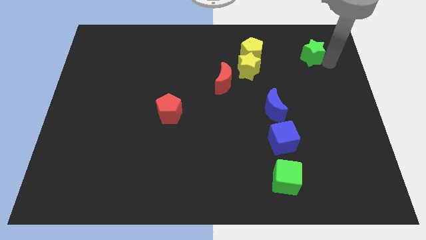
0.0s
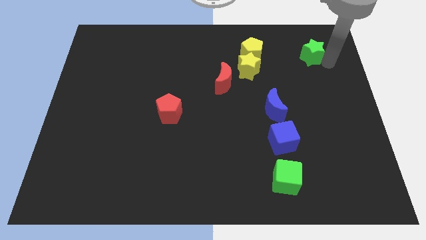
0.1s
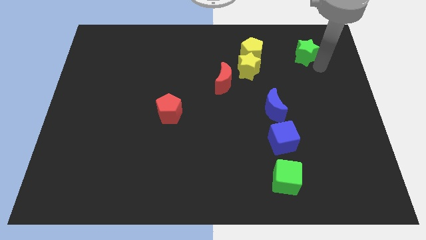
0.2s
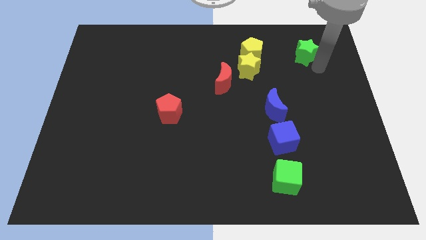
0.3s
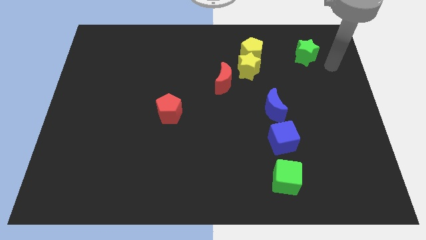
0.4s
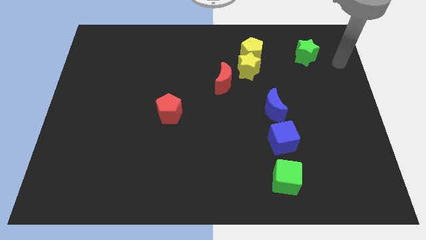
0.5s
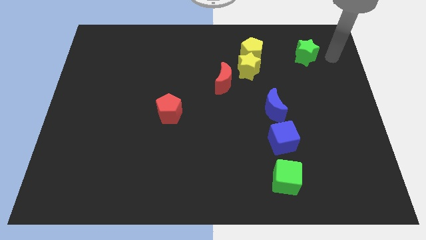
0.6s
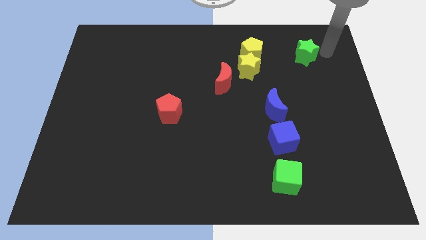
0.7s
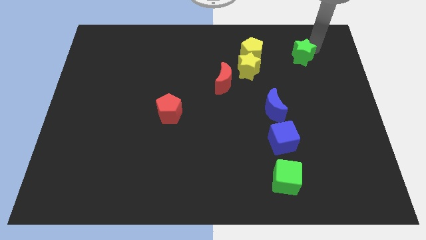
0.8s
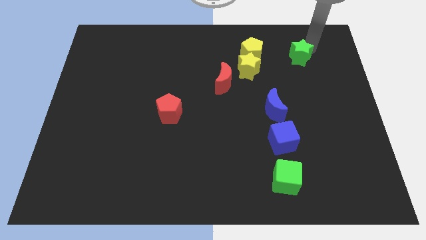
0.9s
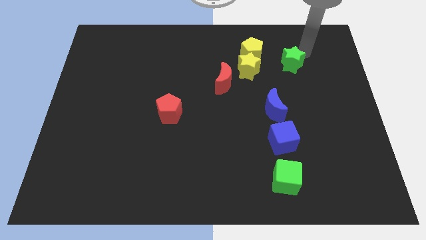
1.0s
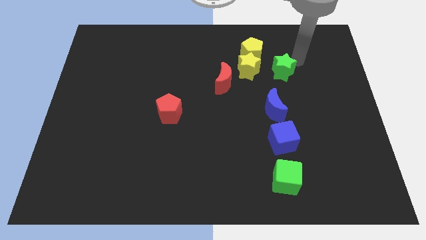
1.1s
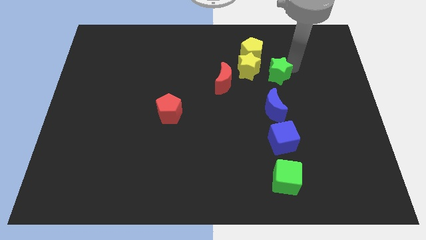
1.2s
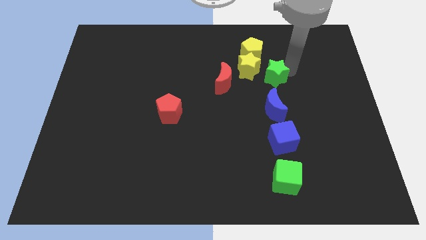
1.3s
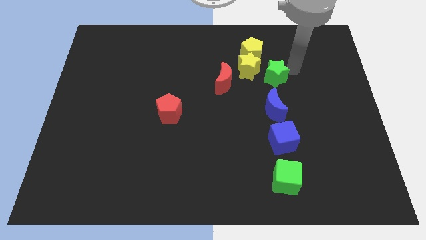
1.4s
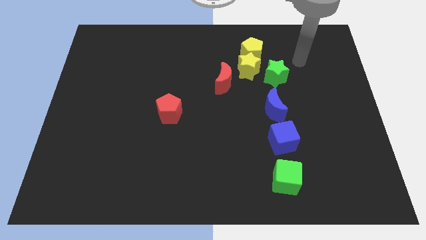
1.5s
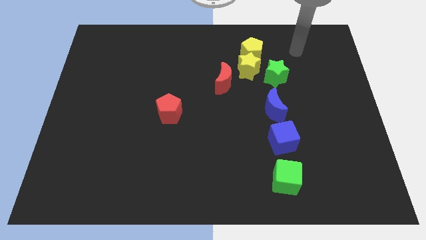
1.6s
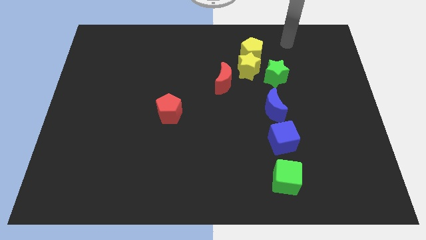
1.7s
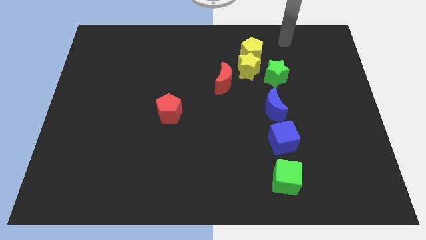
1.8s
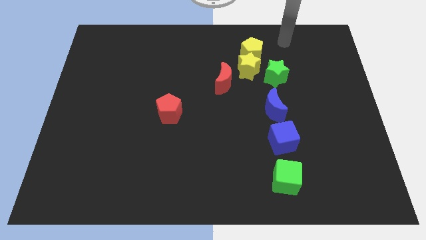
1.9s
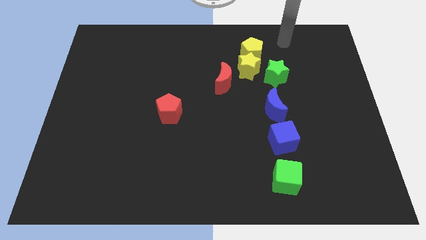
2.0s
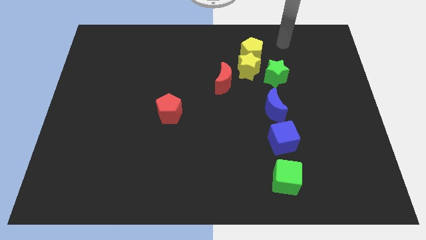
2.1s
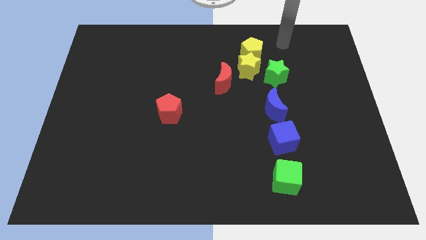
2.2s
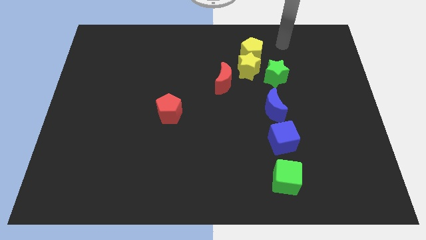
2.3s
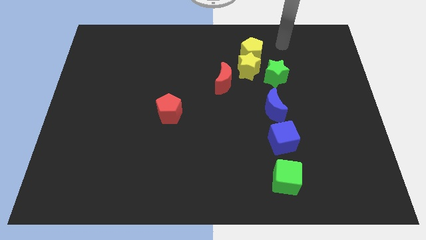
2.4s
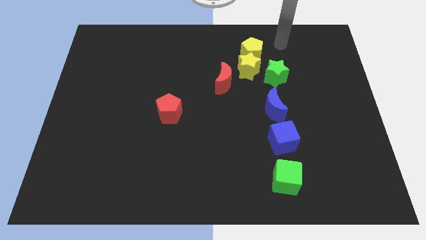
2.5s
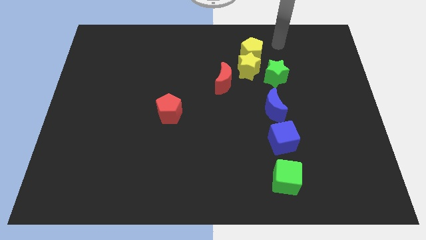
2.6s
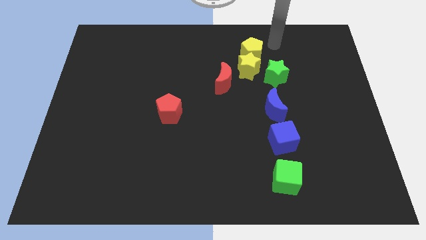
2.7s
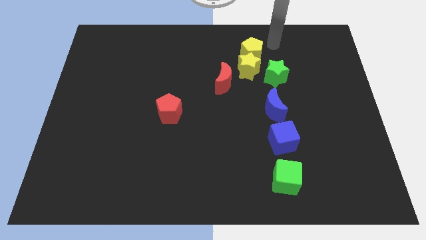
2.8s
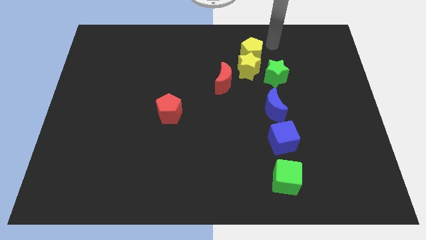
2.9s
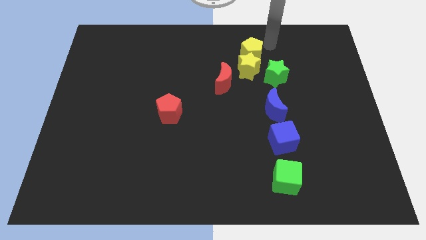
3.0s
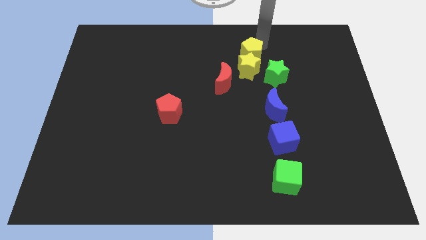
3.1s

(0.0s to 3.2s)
move the green star in a vertical line above the blue crescent

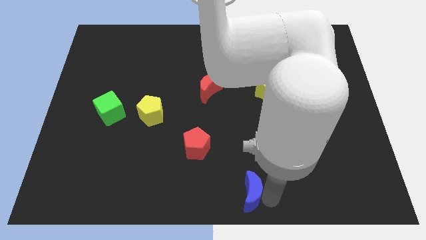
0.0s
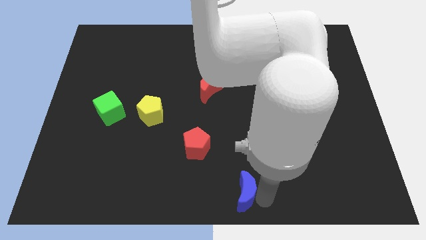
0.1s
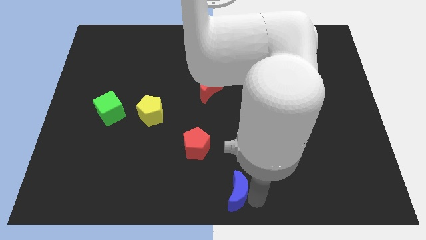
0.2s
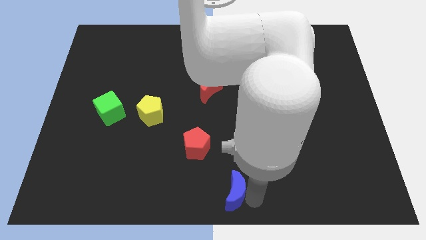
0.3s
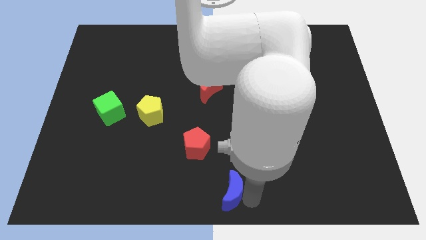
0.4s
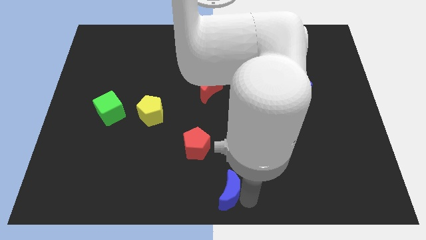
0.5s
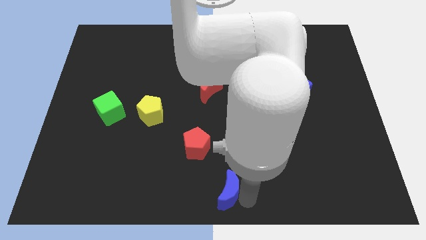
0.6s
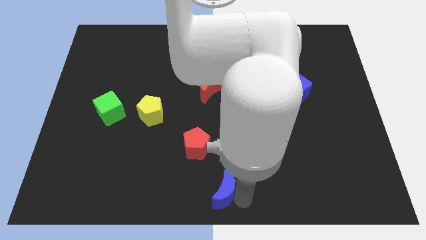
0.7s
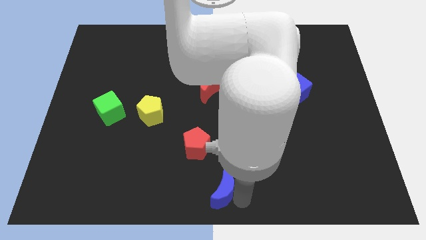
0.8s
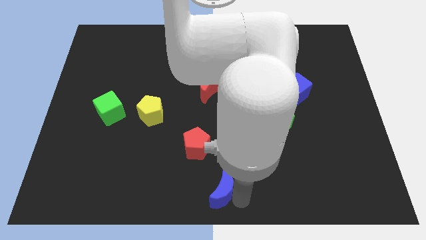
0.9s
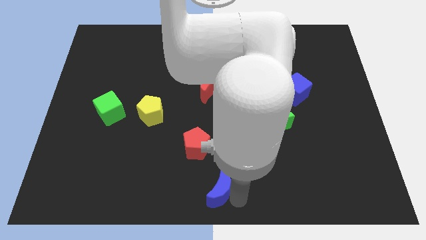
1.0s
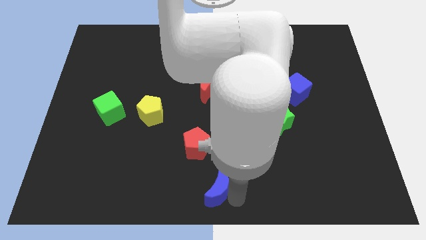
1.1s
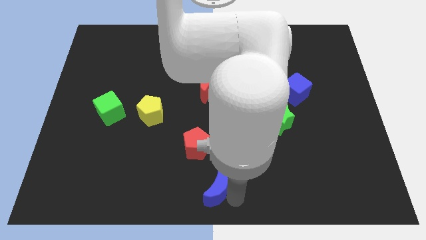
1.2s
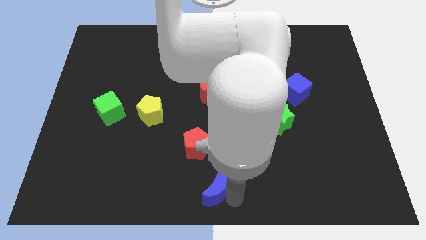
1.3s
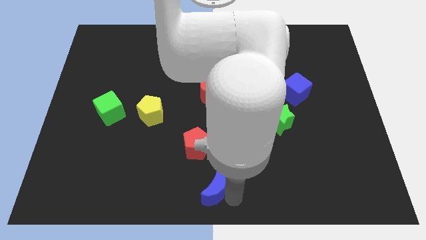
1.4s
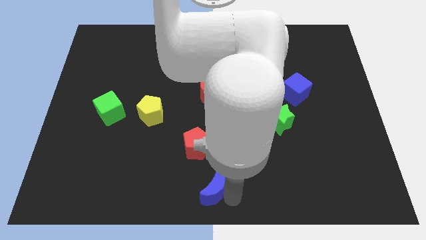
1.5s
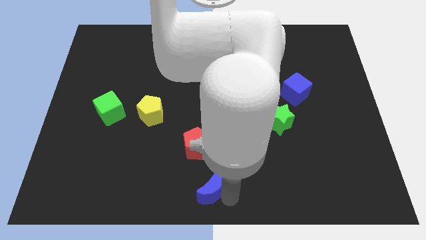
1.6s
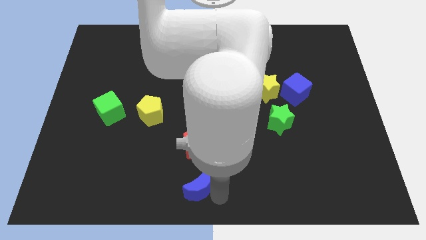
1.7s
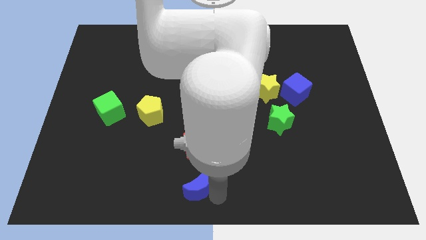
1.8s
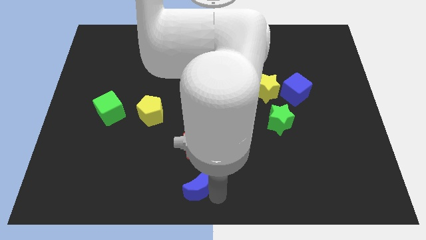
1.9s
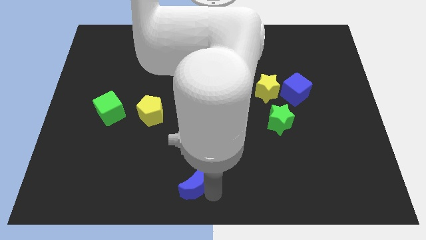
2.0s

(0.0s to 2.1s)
move the blue crescent to the bottom of the red pentagon

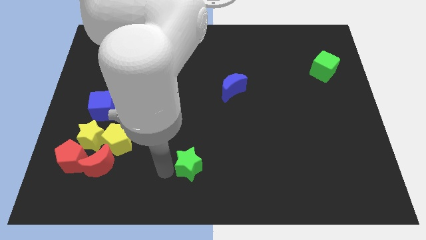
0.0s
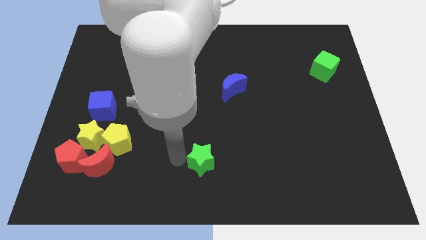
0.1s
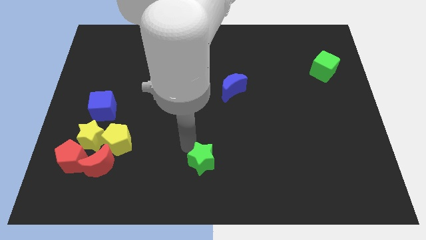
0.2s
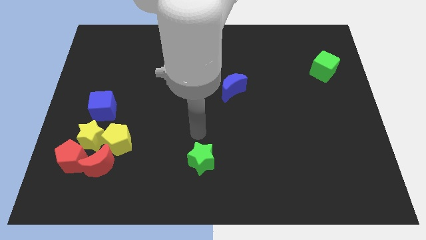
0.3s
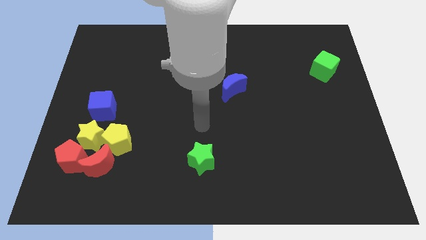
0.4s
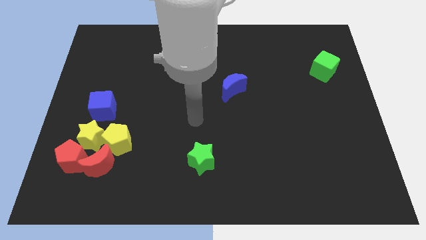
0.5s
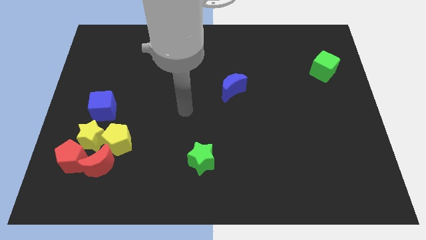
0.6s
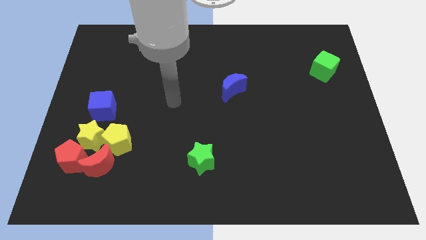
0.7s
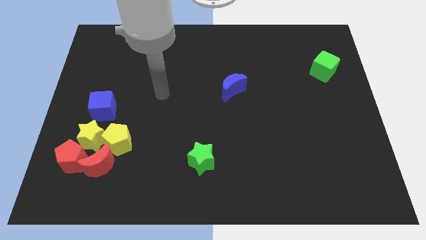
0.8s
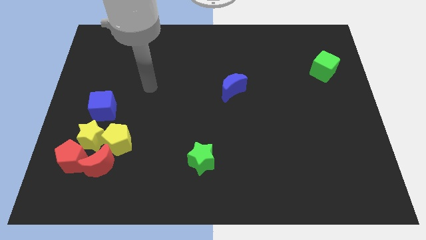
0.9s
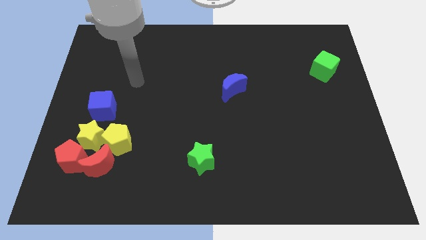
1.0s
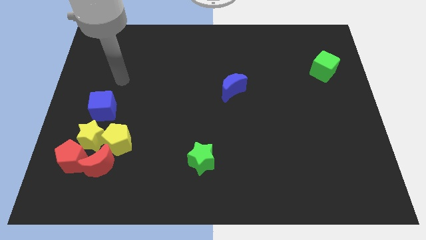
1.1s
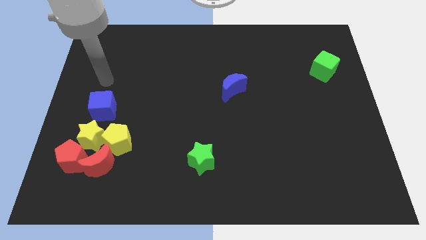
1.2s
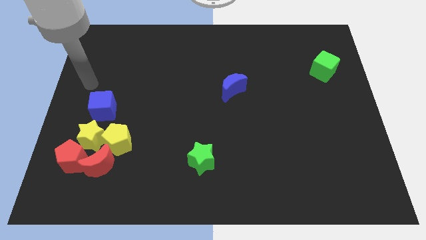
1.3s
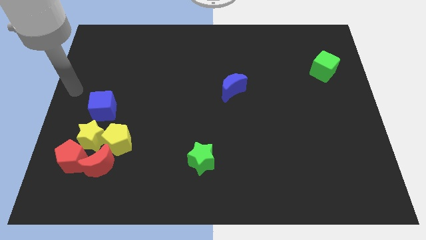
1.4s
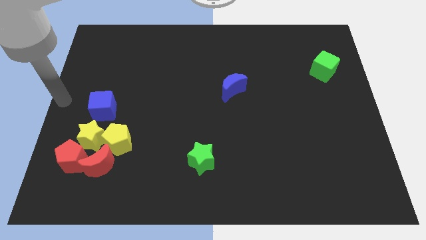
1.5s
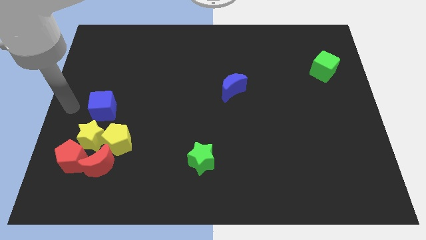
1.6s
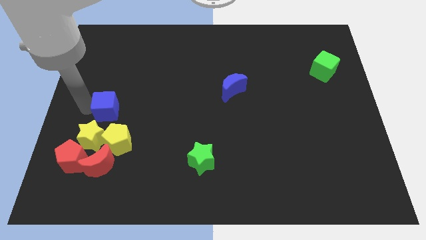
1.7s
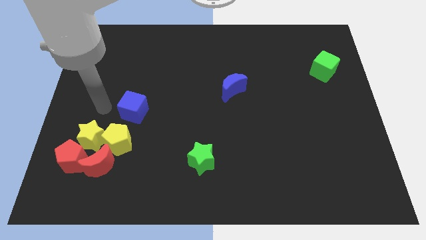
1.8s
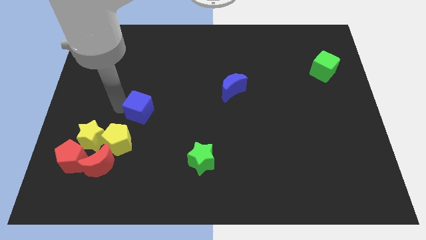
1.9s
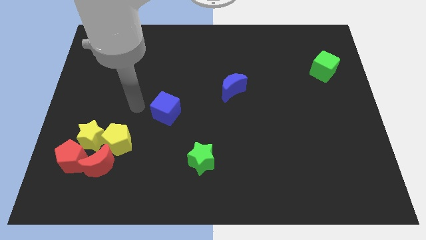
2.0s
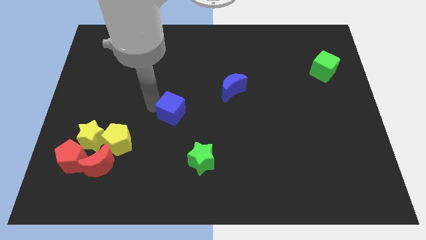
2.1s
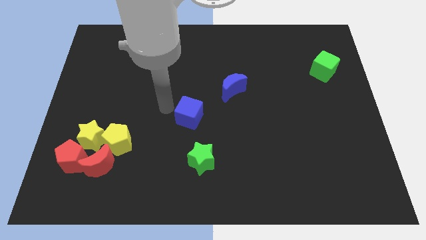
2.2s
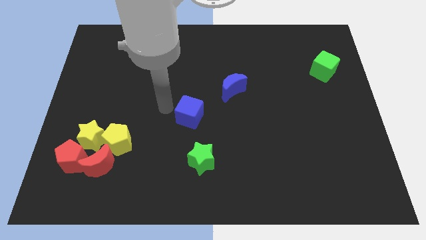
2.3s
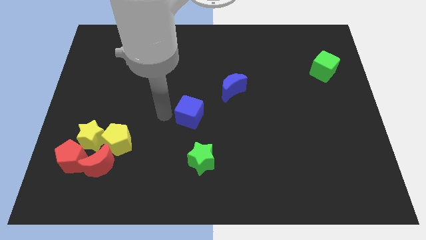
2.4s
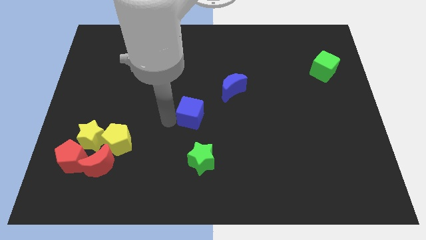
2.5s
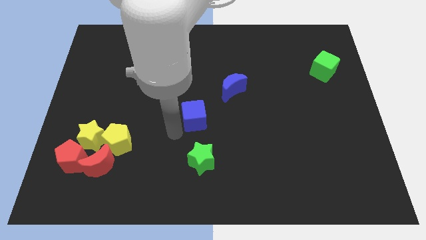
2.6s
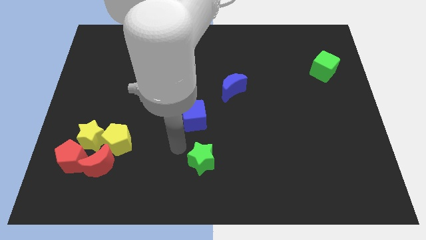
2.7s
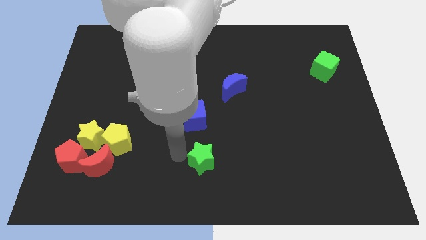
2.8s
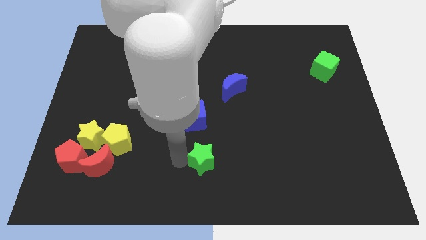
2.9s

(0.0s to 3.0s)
push the blue cube above the green star

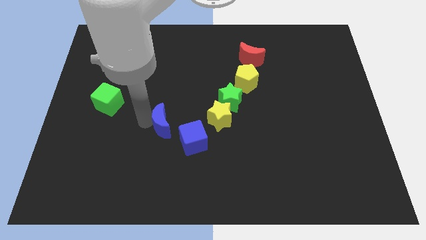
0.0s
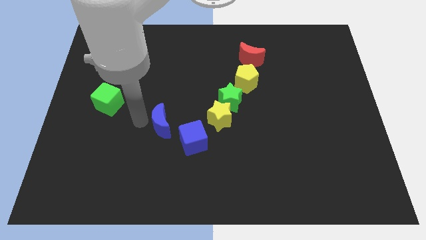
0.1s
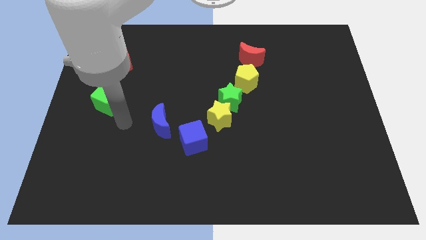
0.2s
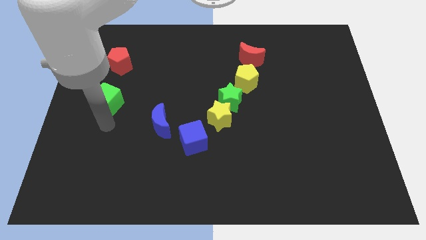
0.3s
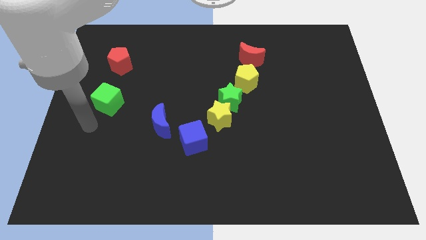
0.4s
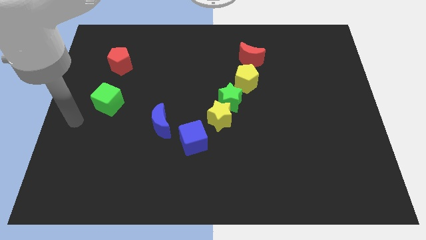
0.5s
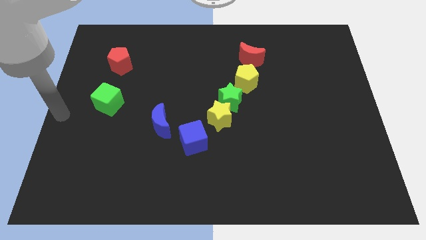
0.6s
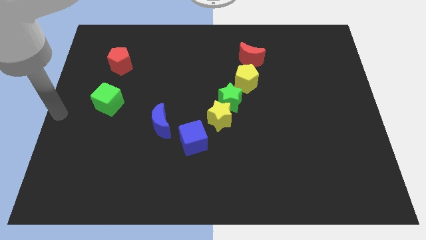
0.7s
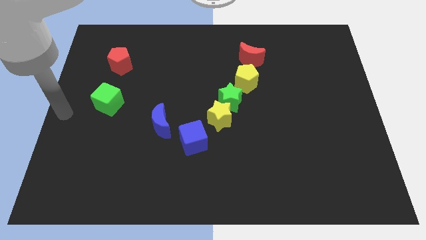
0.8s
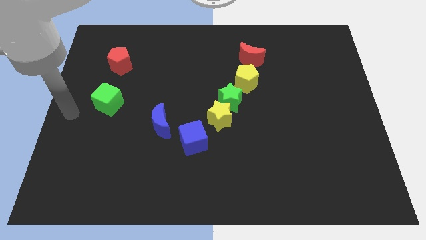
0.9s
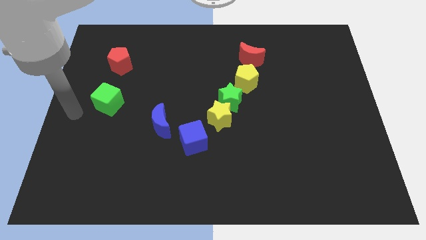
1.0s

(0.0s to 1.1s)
point your arm at the center left side of the board
